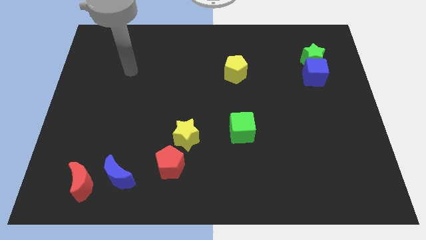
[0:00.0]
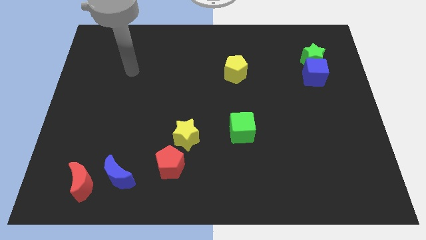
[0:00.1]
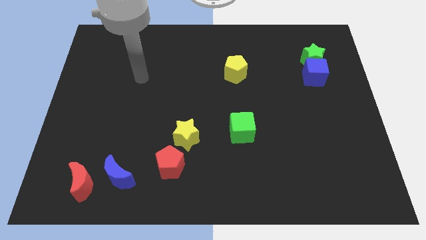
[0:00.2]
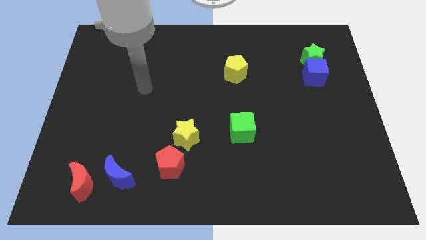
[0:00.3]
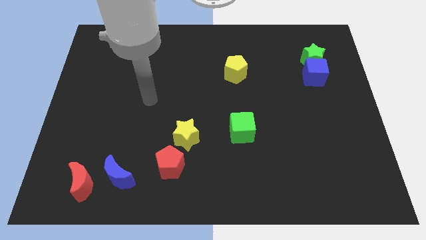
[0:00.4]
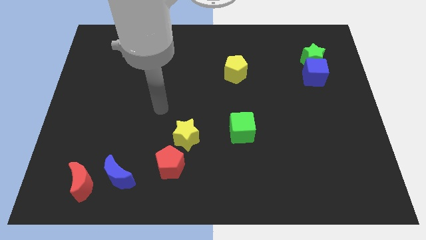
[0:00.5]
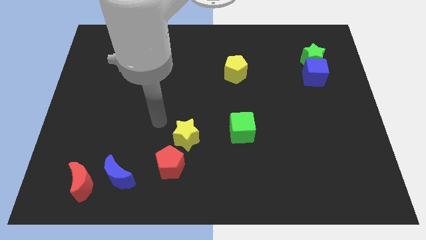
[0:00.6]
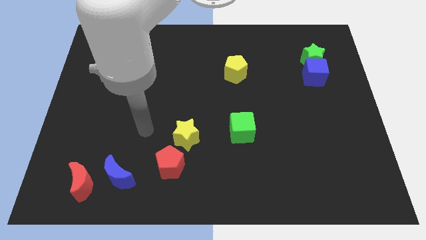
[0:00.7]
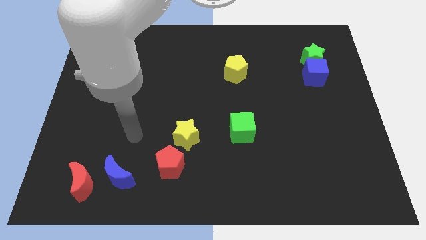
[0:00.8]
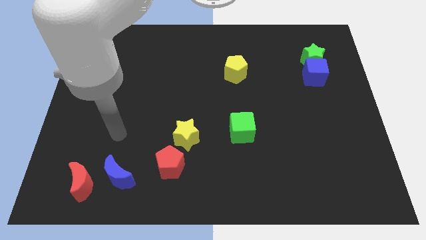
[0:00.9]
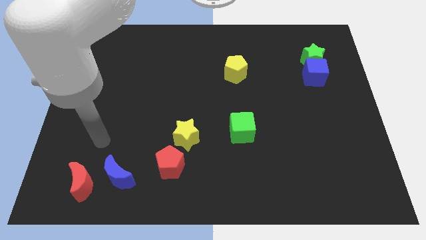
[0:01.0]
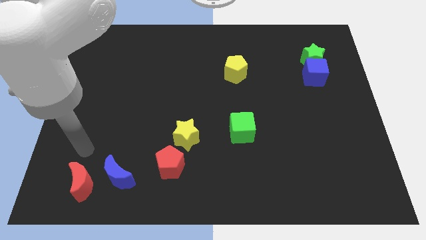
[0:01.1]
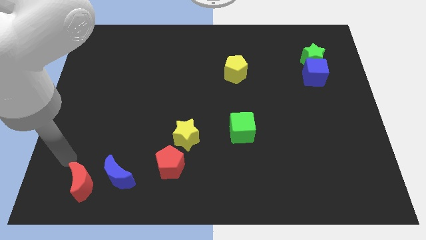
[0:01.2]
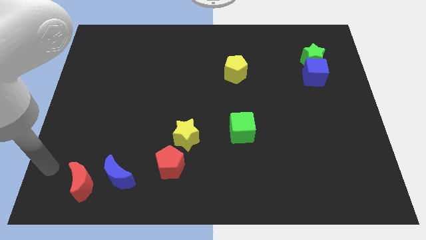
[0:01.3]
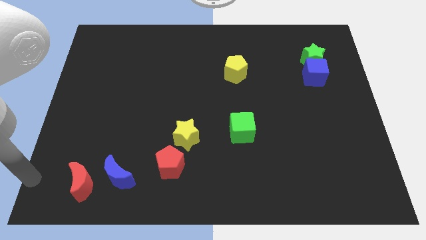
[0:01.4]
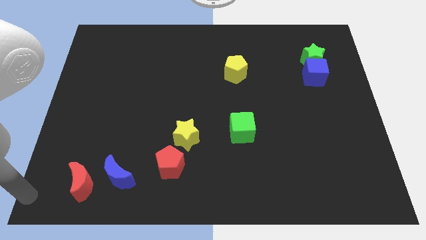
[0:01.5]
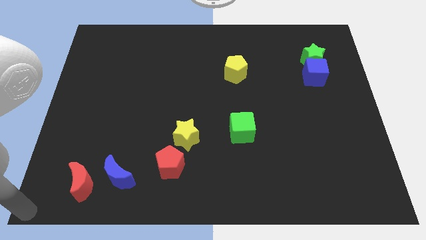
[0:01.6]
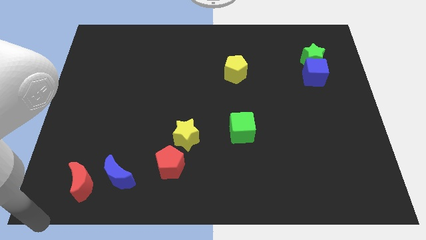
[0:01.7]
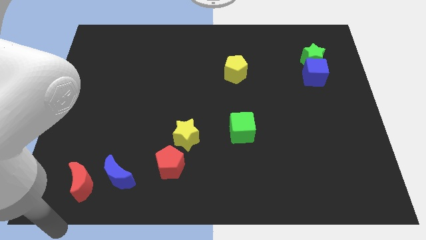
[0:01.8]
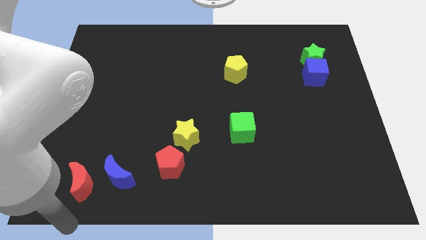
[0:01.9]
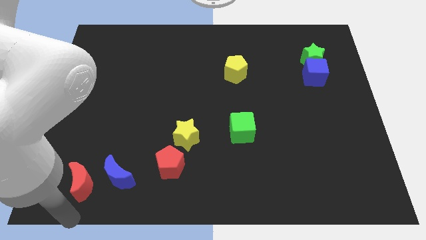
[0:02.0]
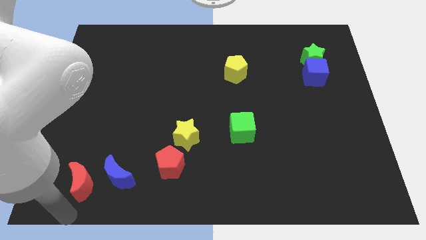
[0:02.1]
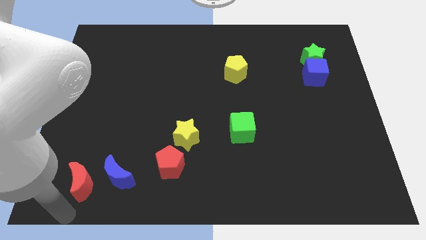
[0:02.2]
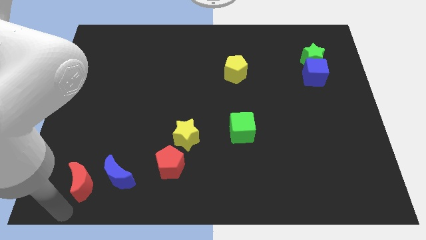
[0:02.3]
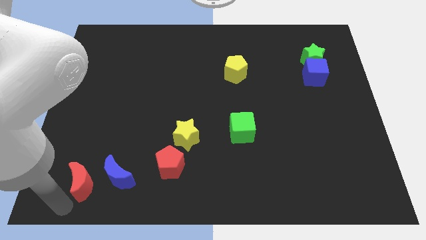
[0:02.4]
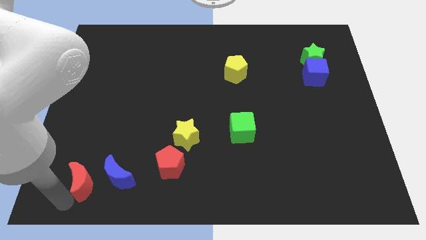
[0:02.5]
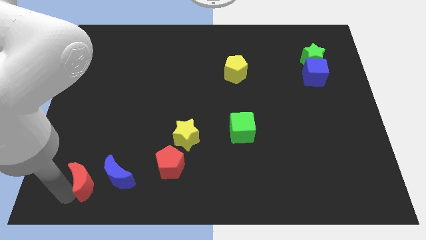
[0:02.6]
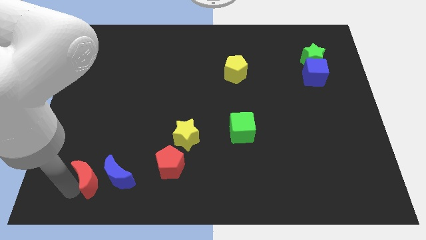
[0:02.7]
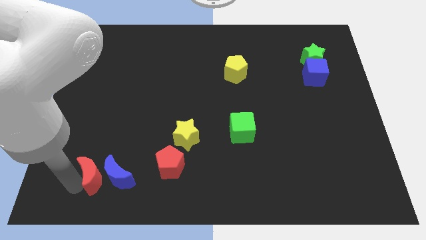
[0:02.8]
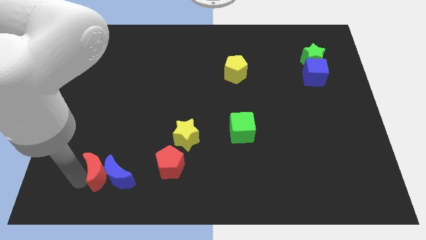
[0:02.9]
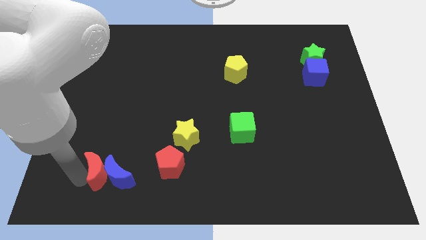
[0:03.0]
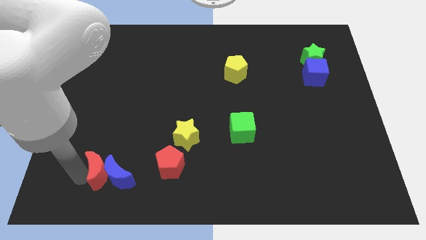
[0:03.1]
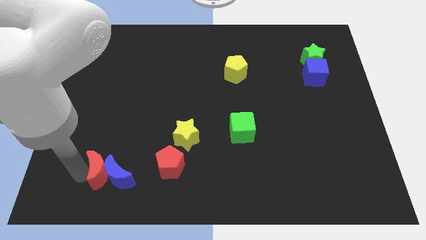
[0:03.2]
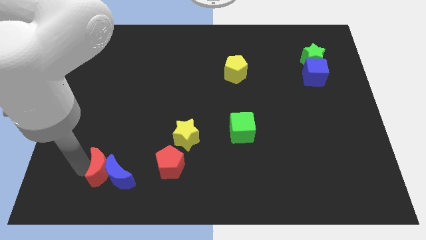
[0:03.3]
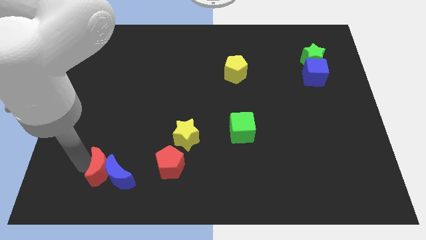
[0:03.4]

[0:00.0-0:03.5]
move the red crescent into the blue crescent

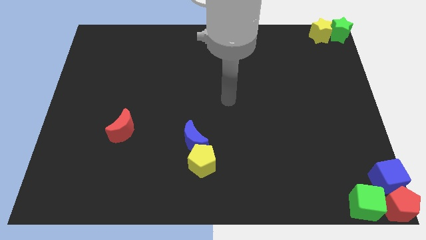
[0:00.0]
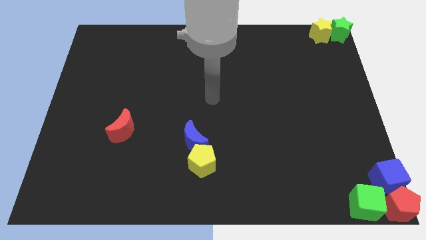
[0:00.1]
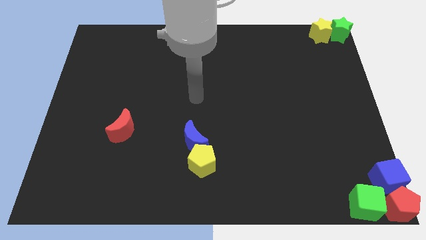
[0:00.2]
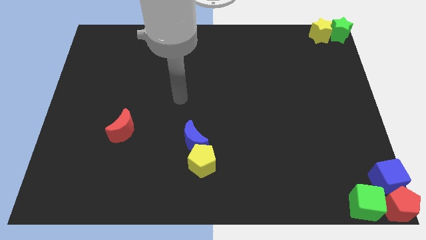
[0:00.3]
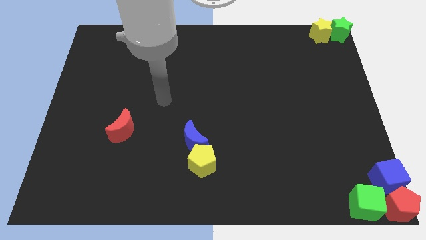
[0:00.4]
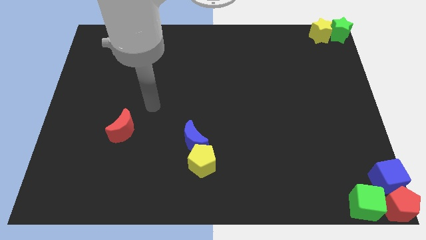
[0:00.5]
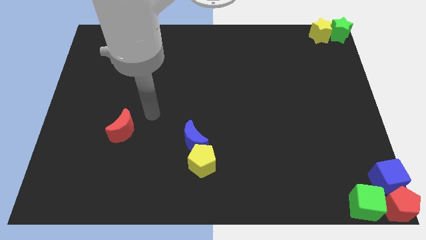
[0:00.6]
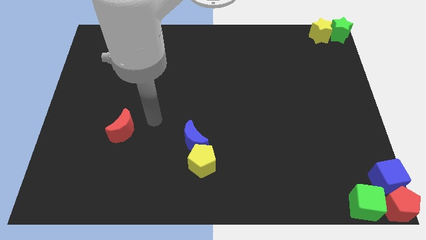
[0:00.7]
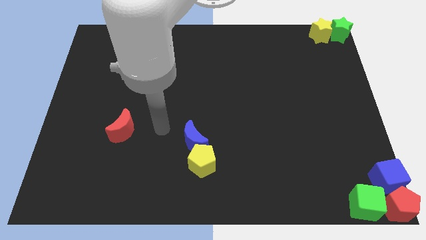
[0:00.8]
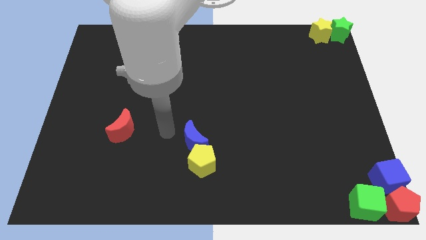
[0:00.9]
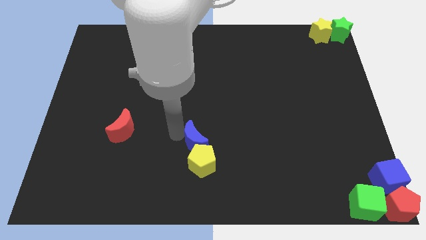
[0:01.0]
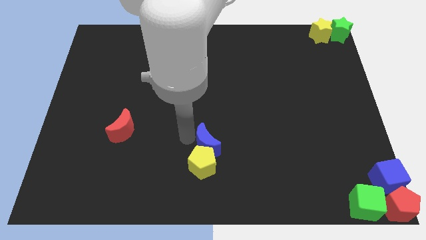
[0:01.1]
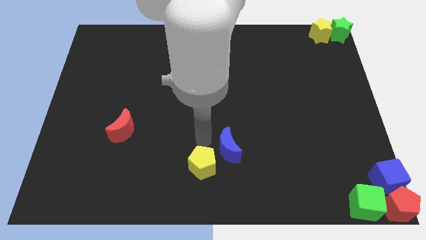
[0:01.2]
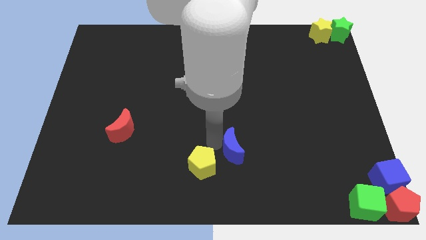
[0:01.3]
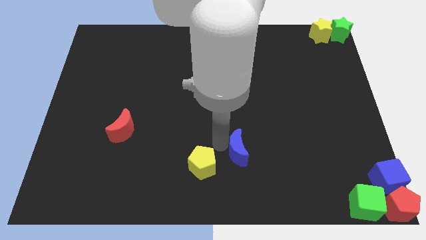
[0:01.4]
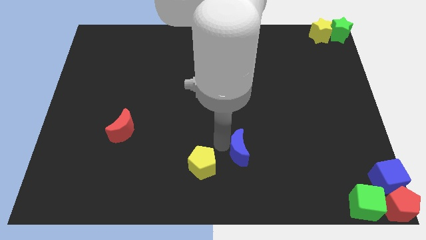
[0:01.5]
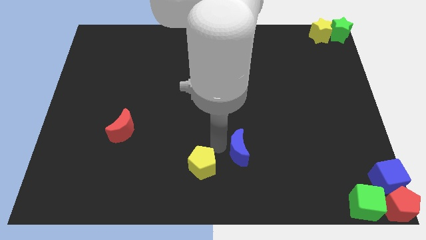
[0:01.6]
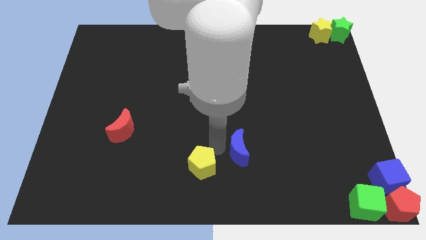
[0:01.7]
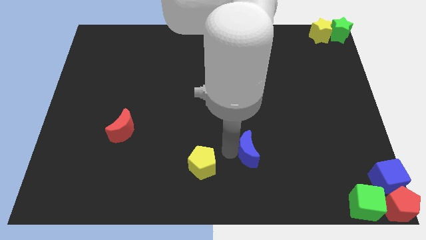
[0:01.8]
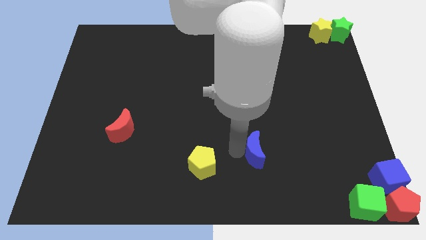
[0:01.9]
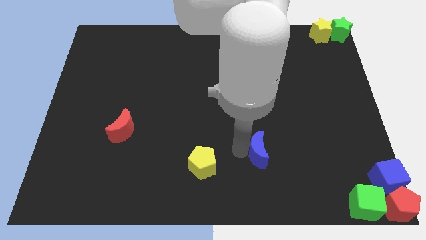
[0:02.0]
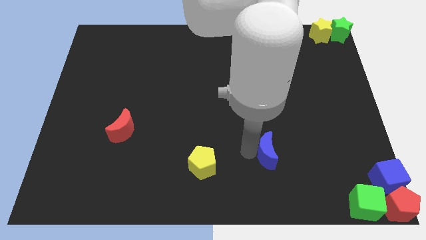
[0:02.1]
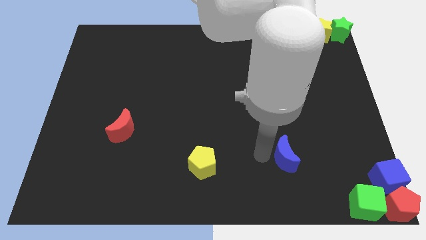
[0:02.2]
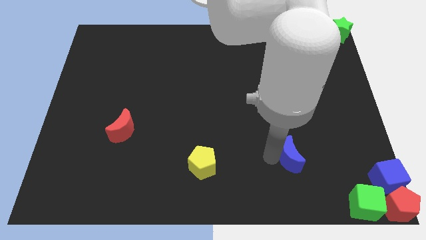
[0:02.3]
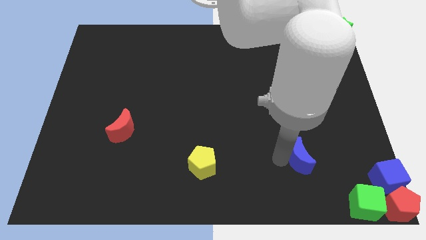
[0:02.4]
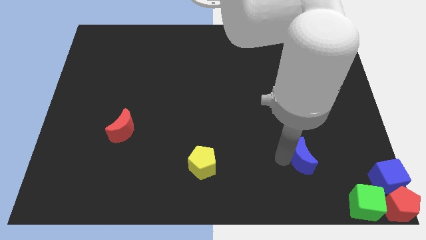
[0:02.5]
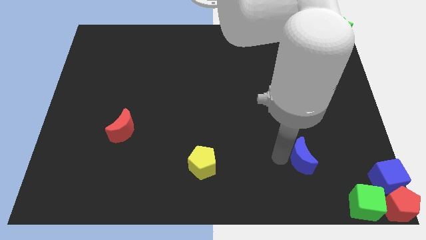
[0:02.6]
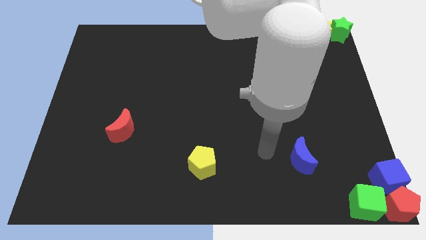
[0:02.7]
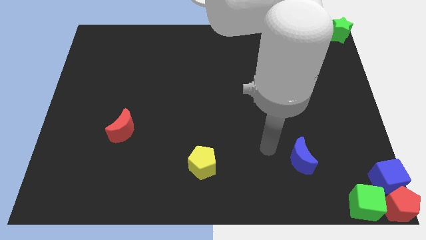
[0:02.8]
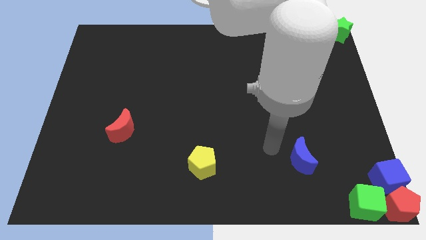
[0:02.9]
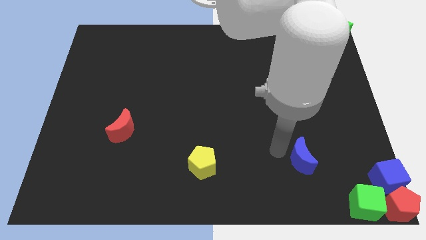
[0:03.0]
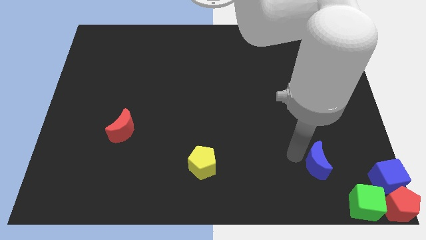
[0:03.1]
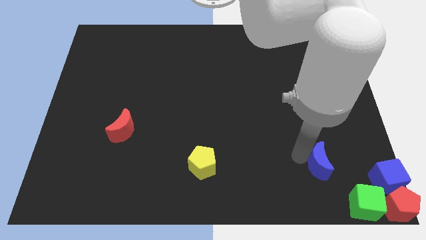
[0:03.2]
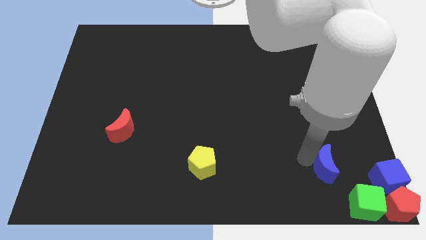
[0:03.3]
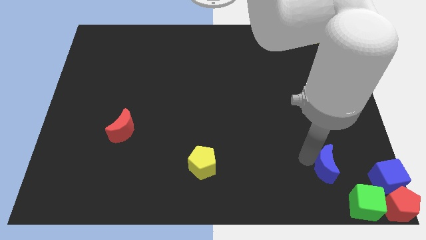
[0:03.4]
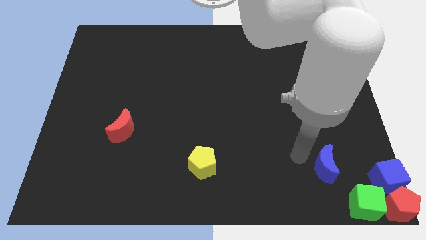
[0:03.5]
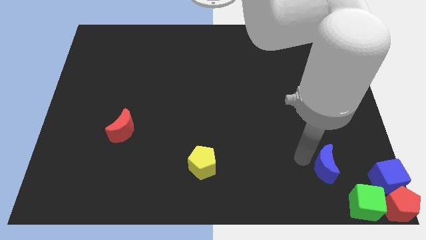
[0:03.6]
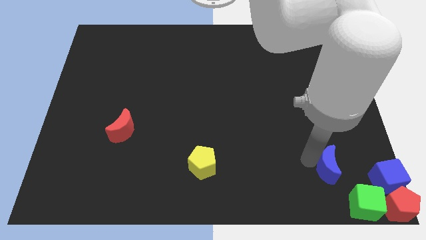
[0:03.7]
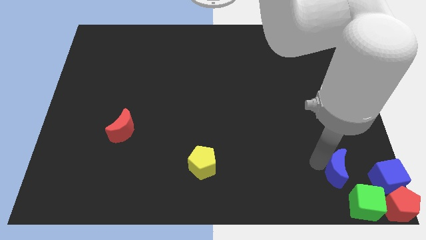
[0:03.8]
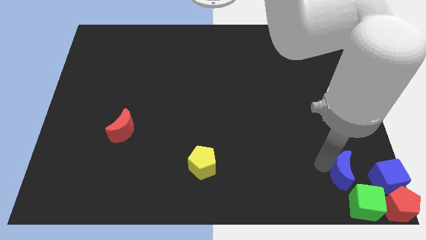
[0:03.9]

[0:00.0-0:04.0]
separate blue moon from the yellow pentagon

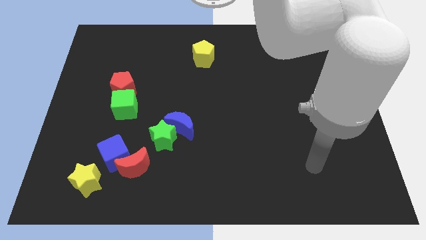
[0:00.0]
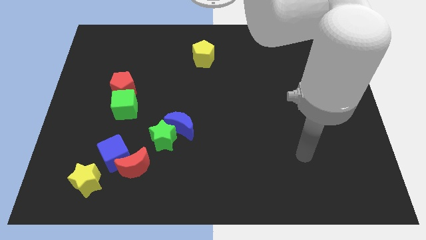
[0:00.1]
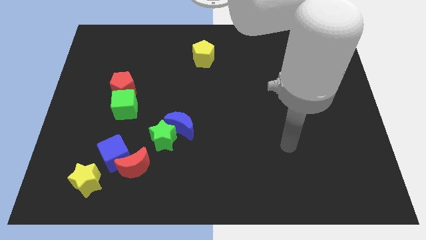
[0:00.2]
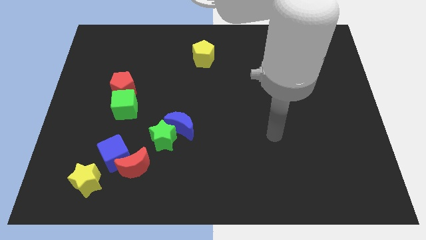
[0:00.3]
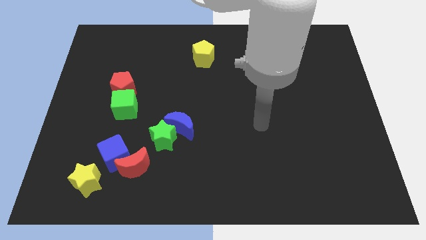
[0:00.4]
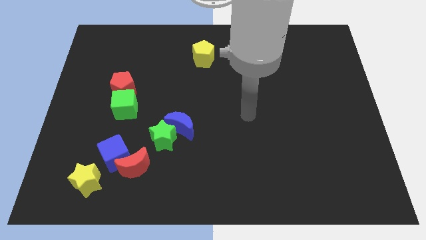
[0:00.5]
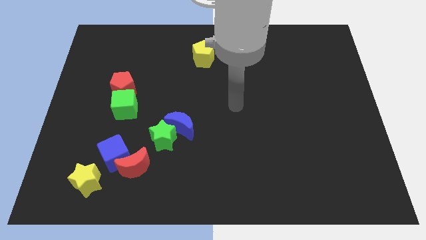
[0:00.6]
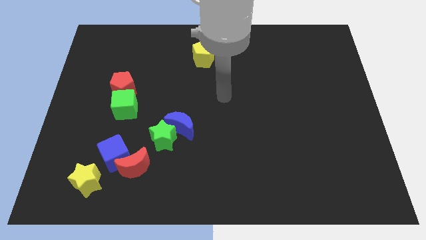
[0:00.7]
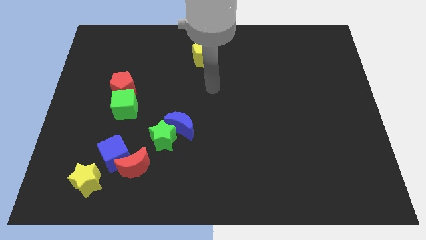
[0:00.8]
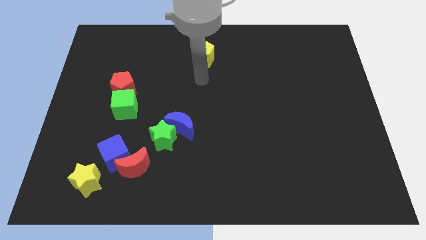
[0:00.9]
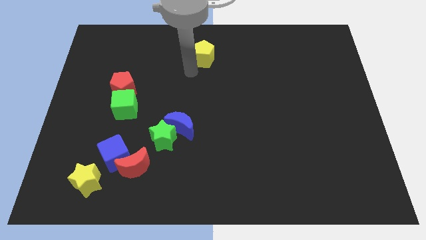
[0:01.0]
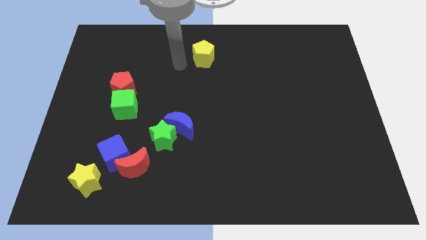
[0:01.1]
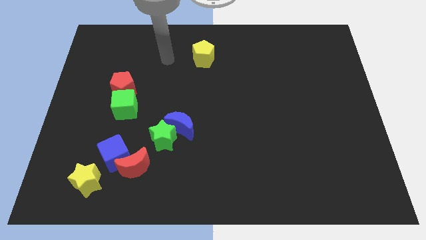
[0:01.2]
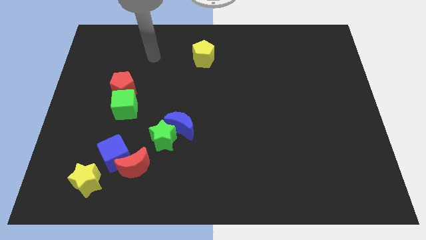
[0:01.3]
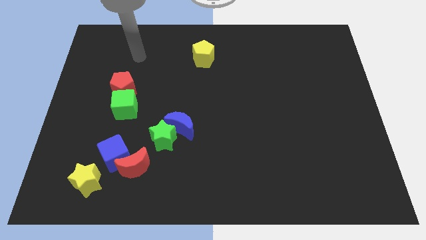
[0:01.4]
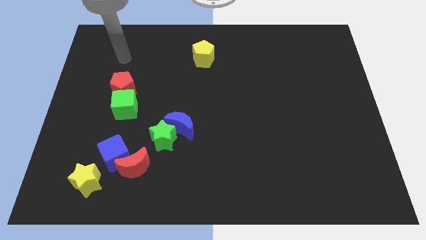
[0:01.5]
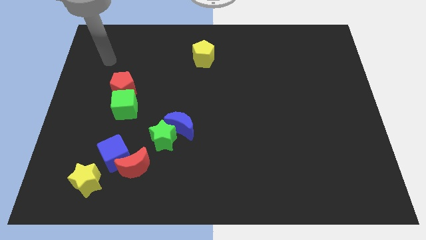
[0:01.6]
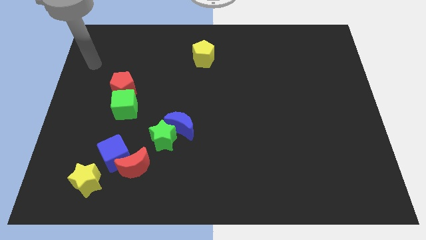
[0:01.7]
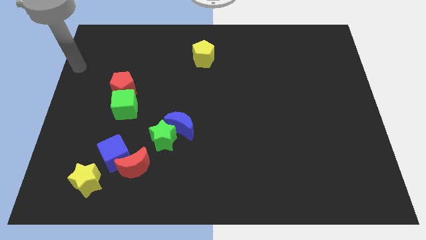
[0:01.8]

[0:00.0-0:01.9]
point your arm diagonal above yellow star
